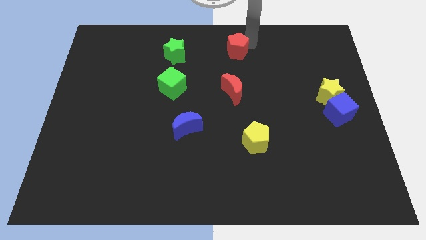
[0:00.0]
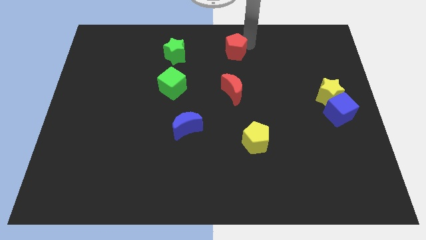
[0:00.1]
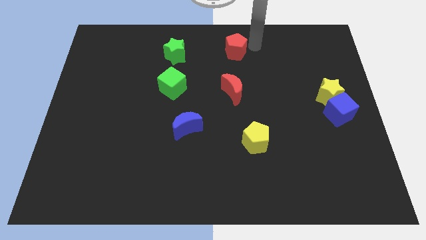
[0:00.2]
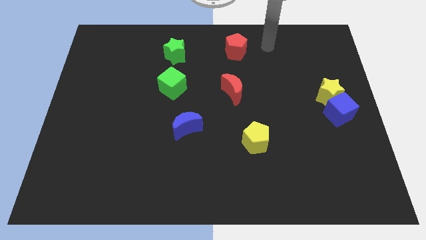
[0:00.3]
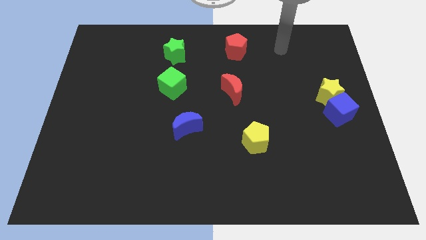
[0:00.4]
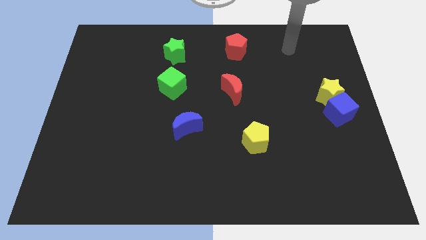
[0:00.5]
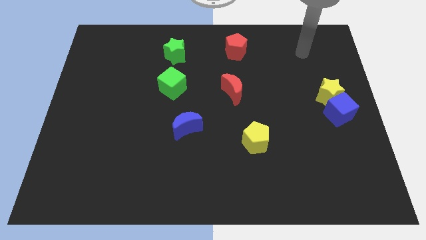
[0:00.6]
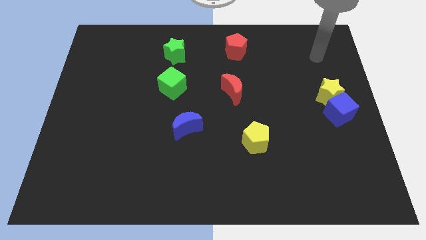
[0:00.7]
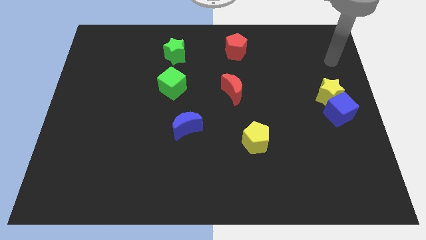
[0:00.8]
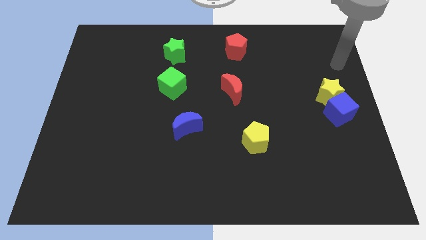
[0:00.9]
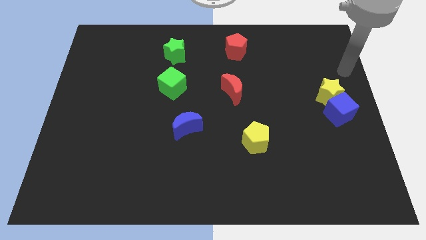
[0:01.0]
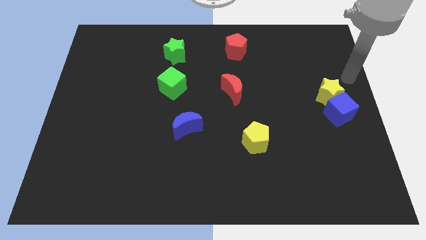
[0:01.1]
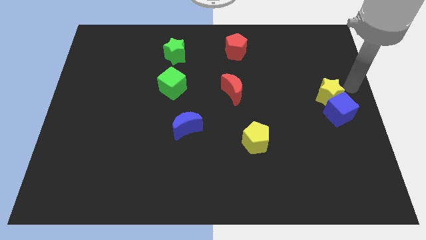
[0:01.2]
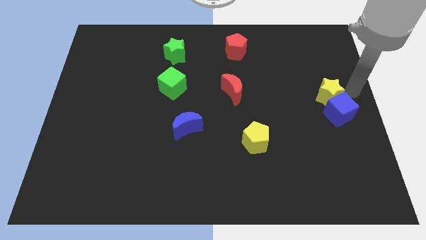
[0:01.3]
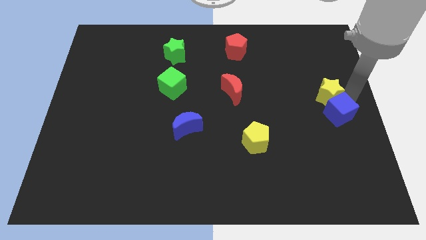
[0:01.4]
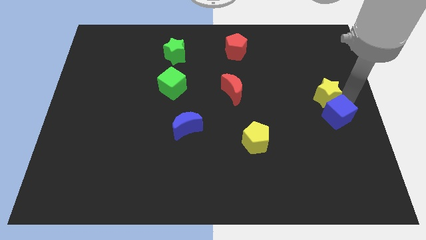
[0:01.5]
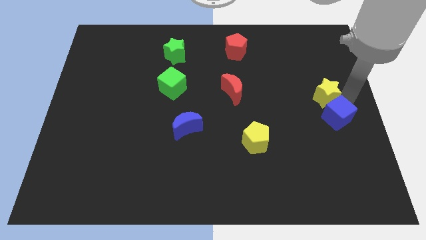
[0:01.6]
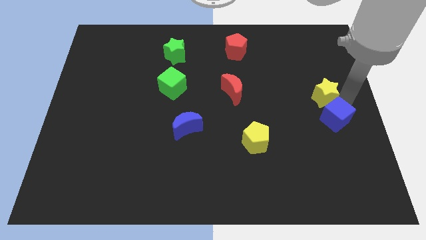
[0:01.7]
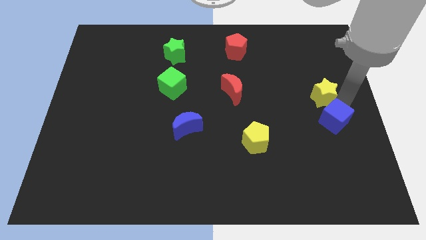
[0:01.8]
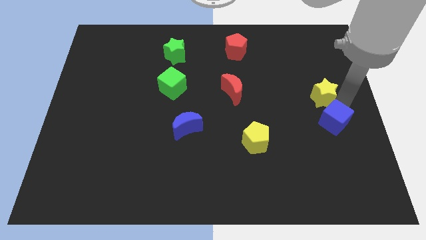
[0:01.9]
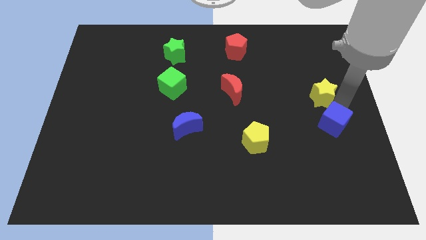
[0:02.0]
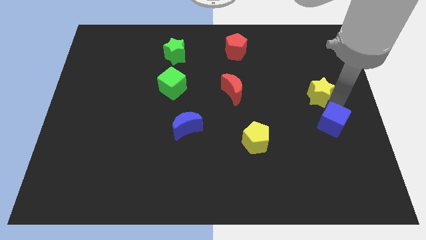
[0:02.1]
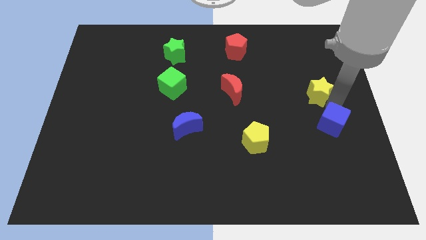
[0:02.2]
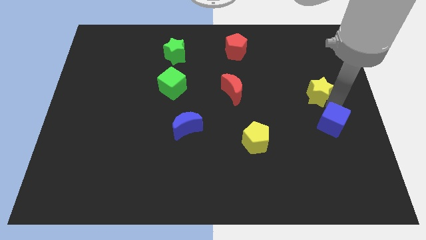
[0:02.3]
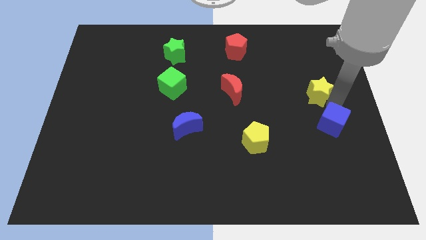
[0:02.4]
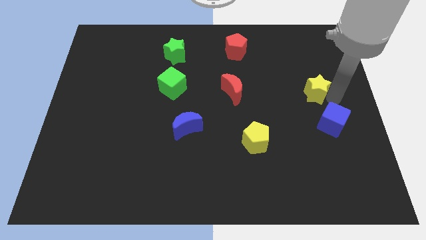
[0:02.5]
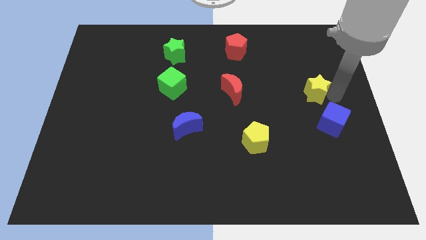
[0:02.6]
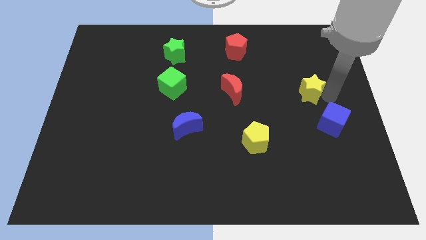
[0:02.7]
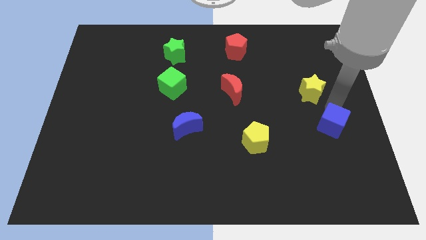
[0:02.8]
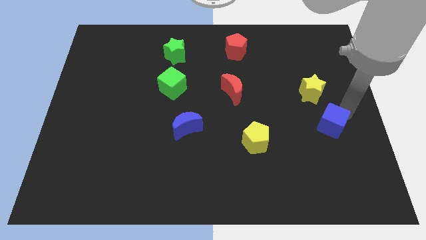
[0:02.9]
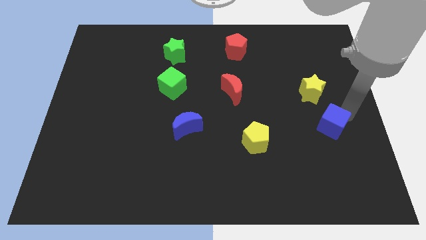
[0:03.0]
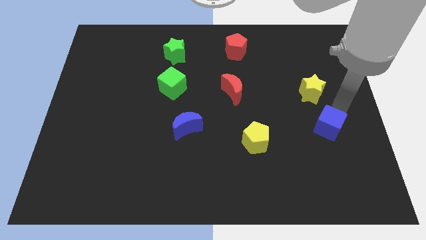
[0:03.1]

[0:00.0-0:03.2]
separate the blue cube from the yellow star

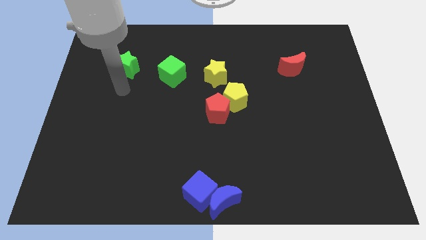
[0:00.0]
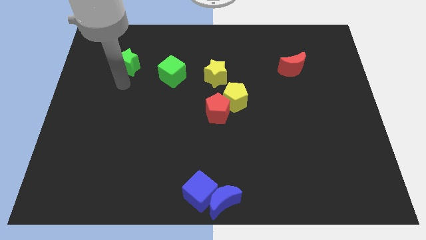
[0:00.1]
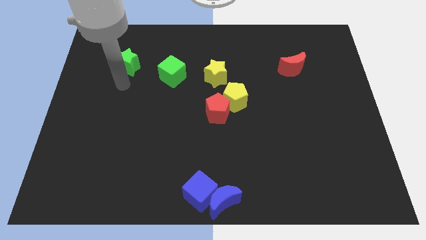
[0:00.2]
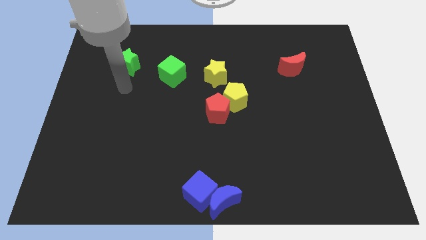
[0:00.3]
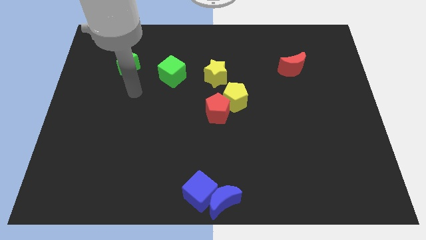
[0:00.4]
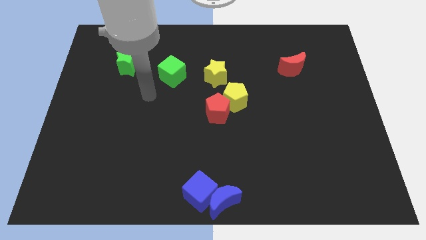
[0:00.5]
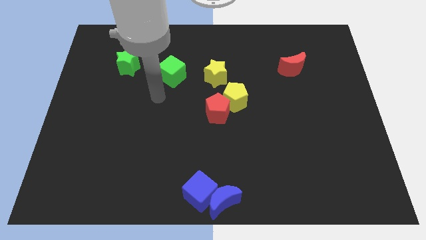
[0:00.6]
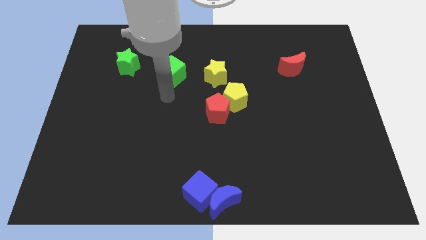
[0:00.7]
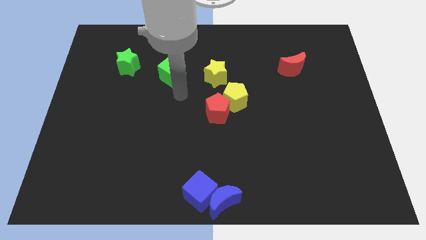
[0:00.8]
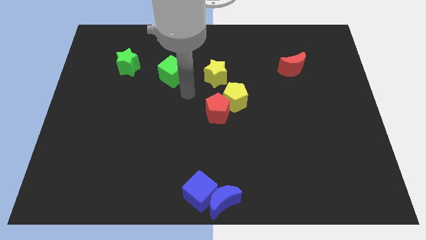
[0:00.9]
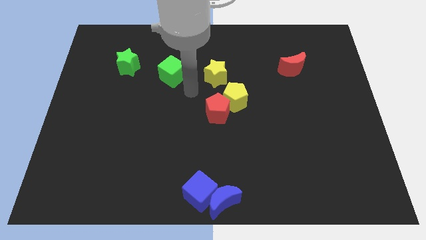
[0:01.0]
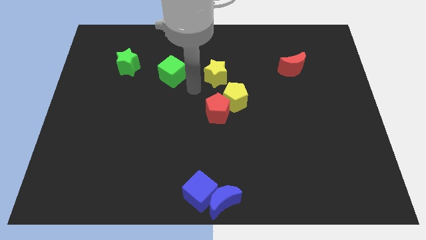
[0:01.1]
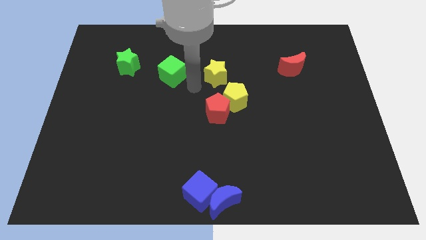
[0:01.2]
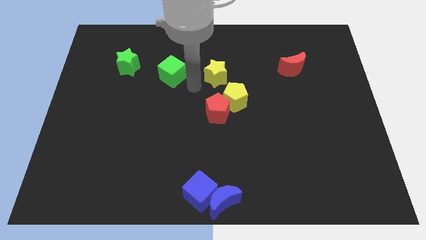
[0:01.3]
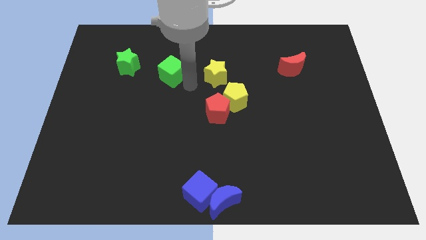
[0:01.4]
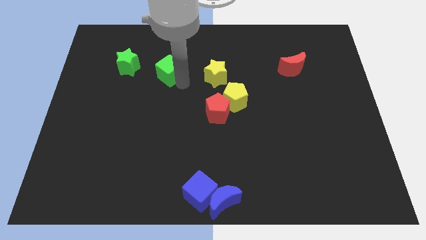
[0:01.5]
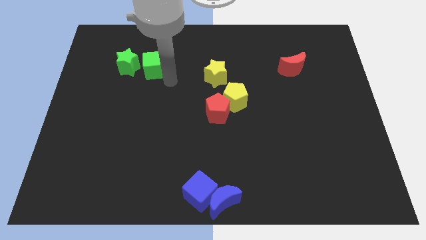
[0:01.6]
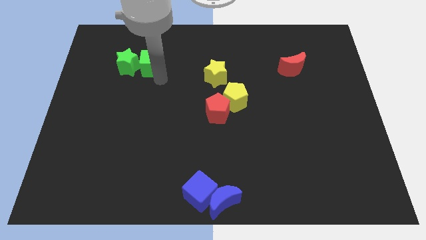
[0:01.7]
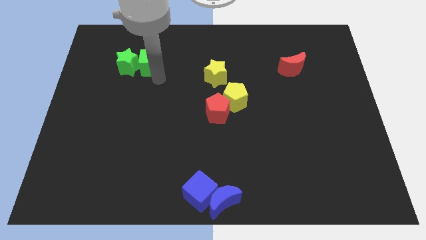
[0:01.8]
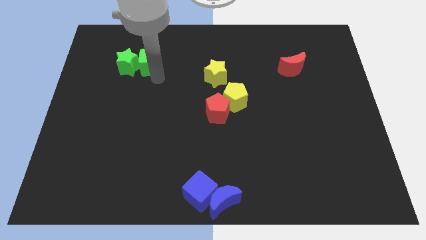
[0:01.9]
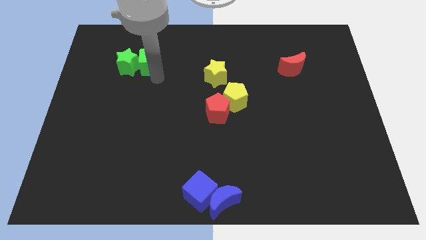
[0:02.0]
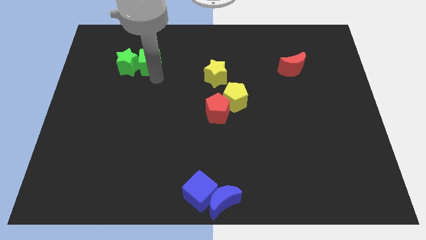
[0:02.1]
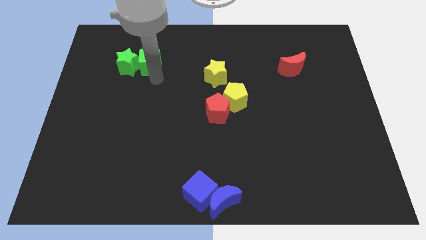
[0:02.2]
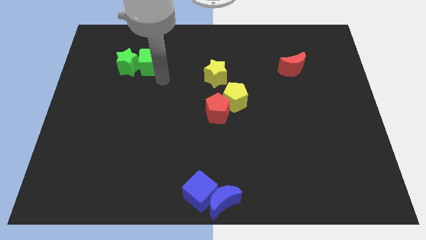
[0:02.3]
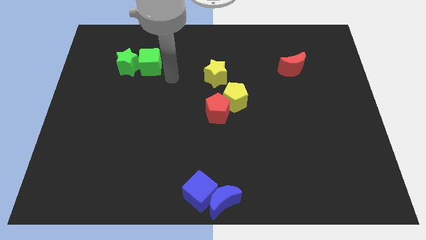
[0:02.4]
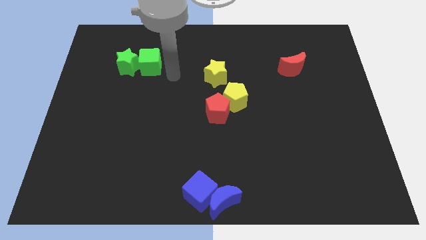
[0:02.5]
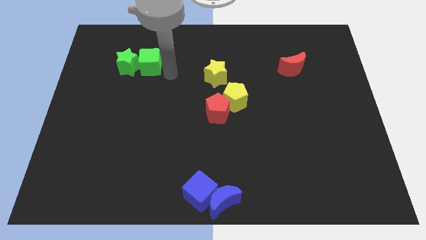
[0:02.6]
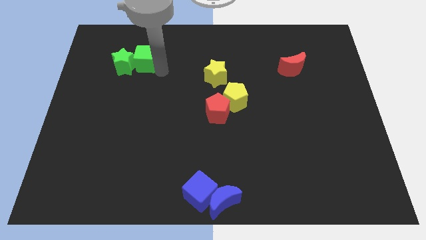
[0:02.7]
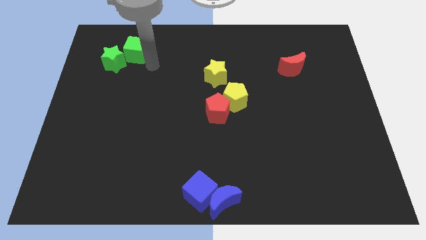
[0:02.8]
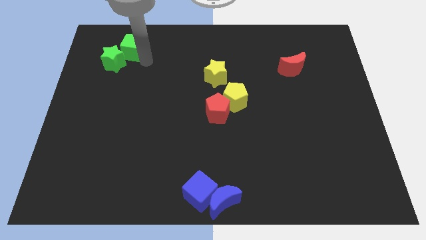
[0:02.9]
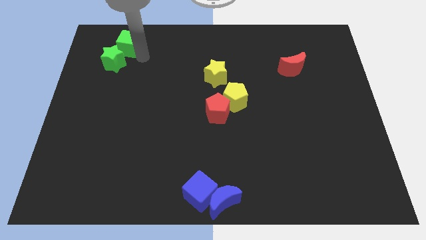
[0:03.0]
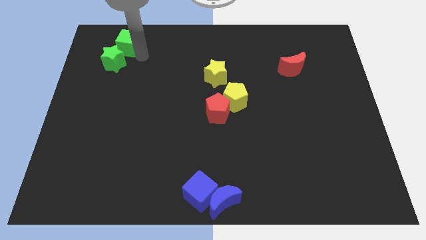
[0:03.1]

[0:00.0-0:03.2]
drag the green blocks towards top left

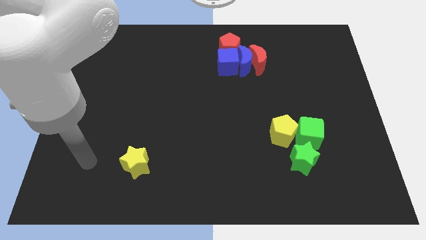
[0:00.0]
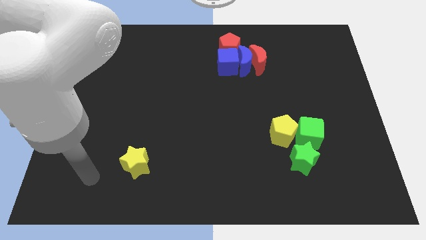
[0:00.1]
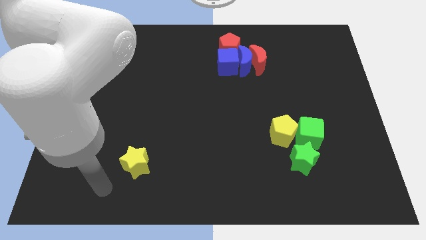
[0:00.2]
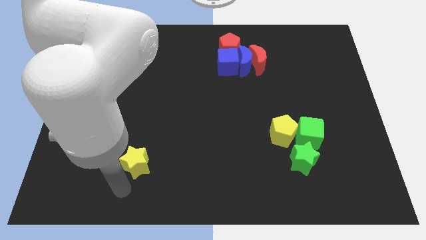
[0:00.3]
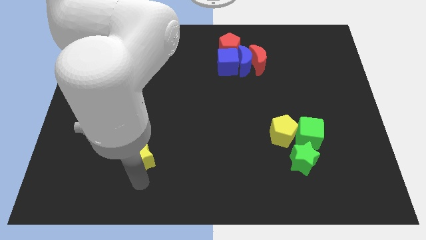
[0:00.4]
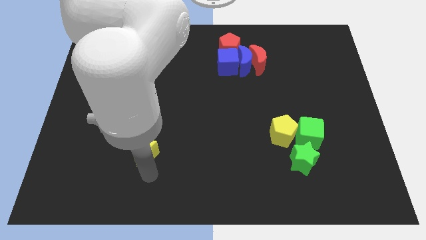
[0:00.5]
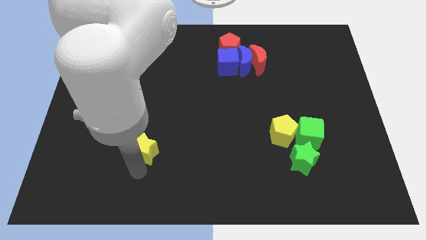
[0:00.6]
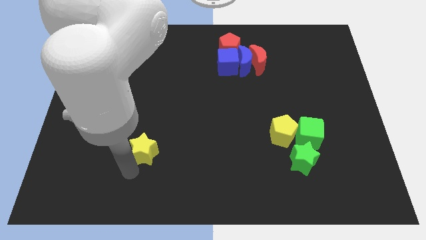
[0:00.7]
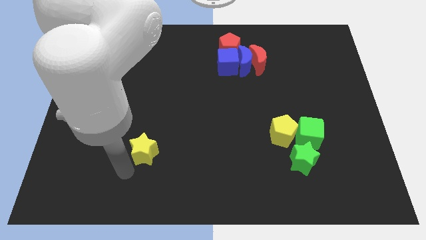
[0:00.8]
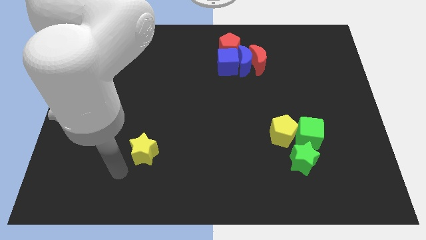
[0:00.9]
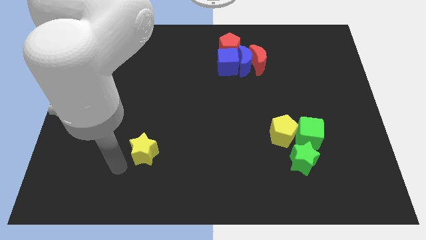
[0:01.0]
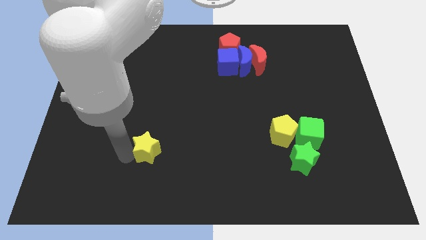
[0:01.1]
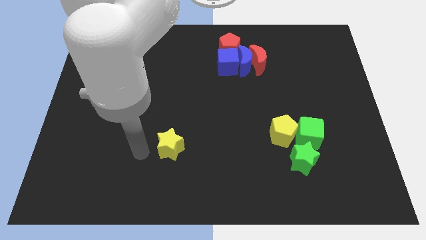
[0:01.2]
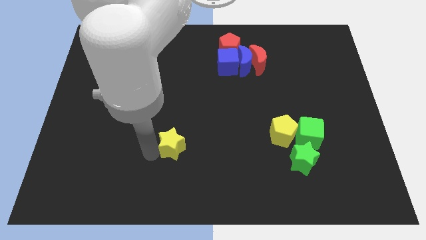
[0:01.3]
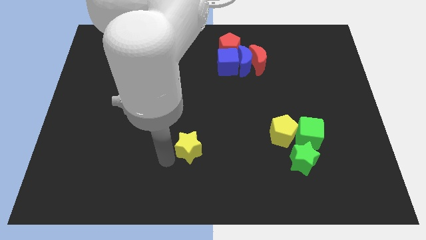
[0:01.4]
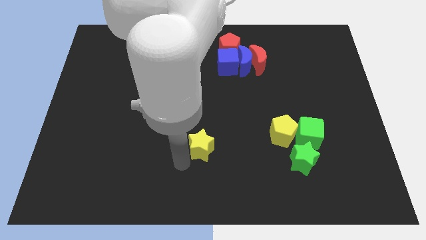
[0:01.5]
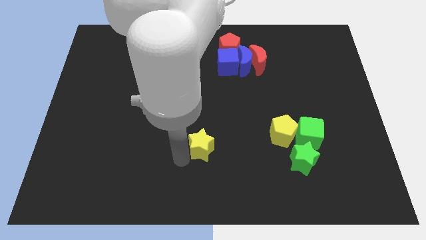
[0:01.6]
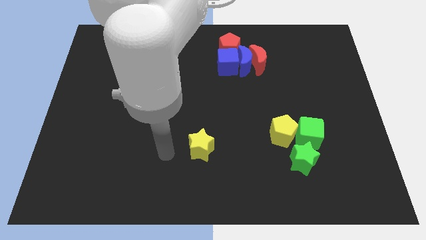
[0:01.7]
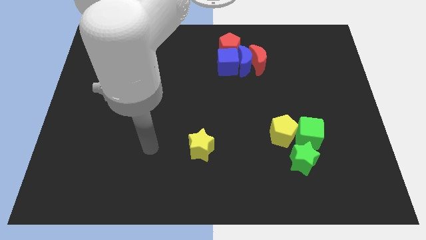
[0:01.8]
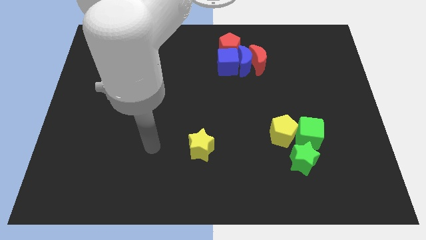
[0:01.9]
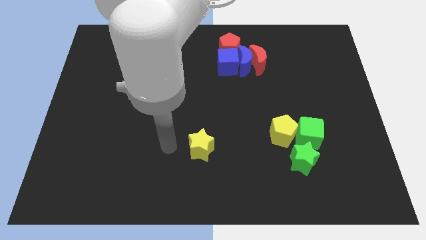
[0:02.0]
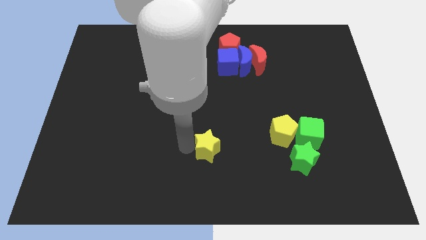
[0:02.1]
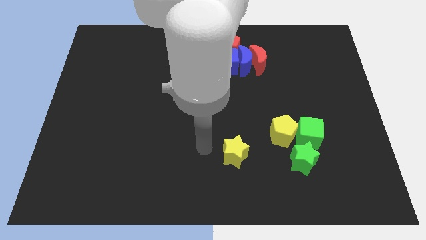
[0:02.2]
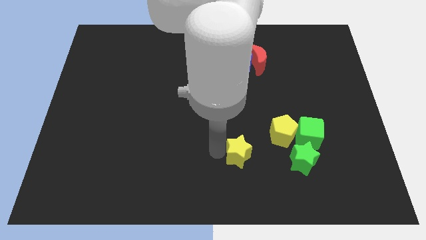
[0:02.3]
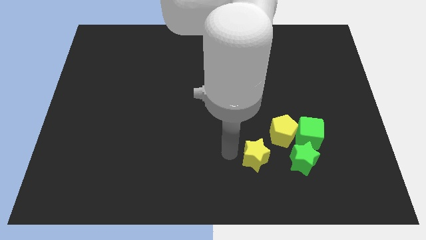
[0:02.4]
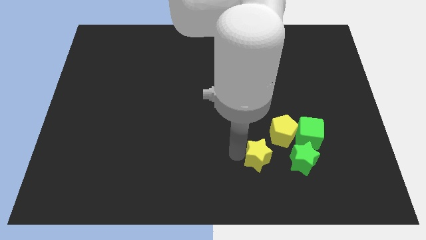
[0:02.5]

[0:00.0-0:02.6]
place the yellow star diagonally bottom left to the yellow pentagon
